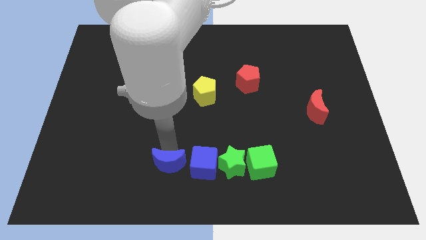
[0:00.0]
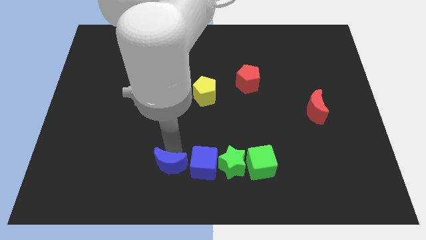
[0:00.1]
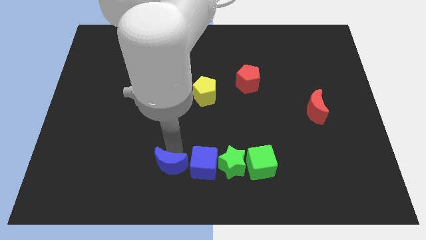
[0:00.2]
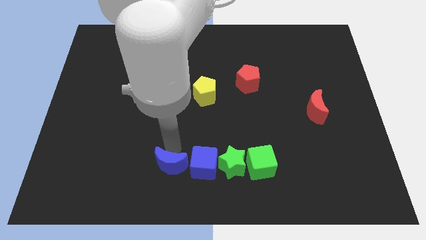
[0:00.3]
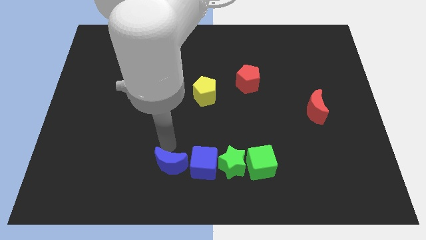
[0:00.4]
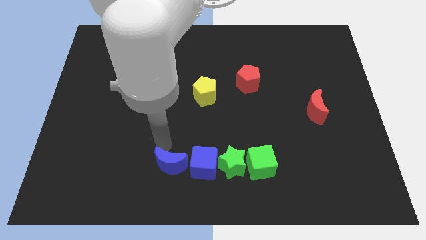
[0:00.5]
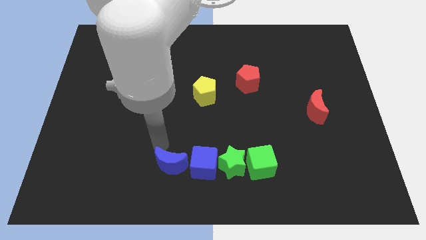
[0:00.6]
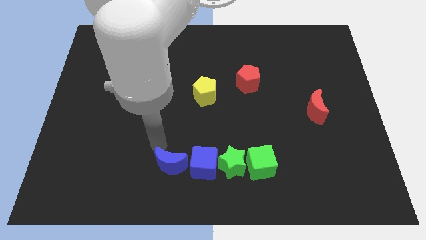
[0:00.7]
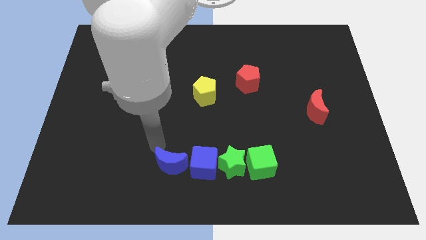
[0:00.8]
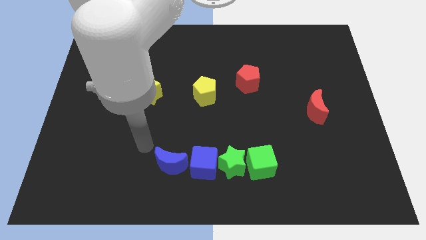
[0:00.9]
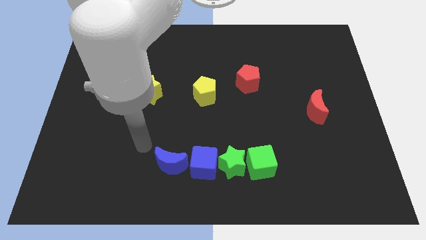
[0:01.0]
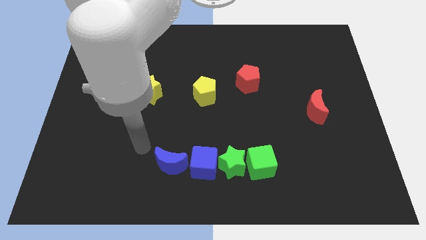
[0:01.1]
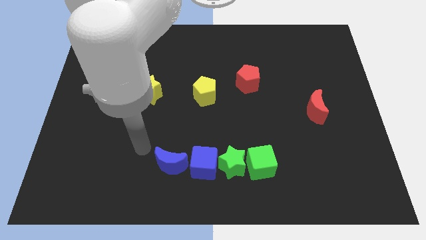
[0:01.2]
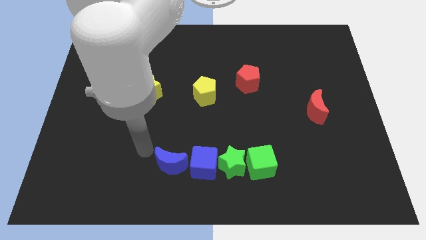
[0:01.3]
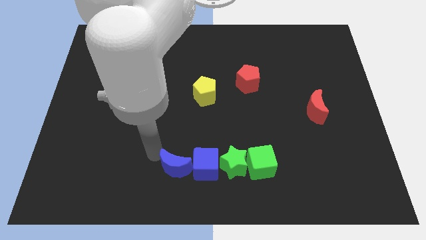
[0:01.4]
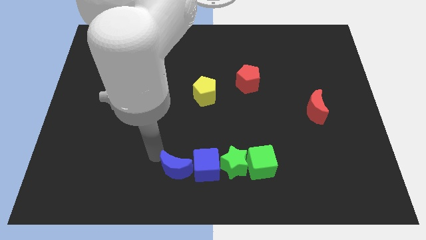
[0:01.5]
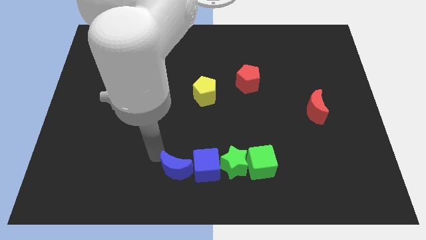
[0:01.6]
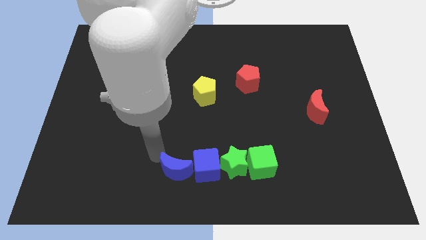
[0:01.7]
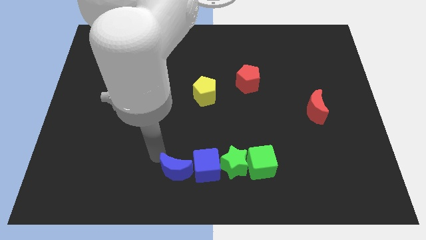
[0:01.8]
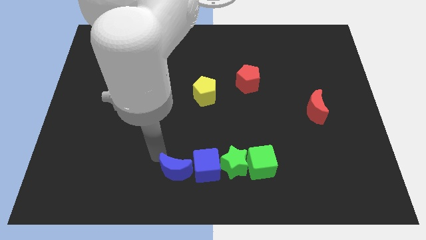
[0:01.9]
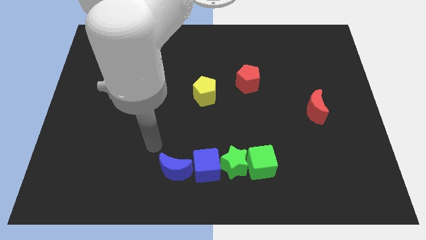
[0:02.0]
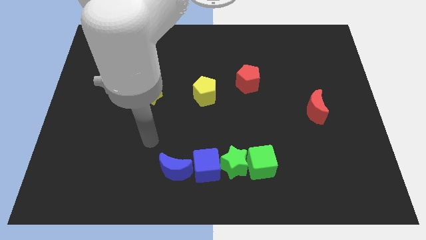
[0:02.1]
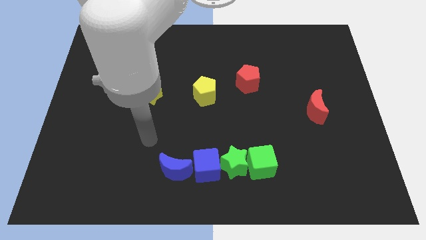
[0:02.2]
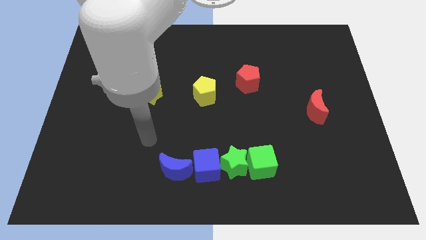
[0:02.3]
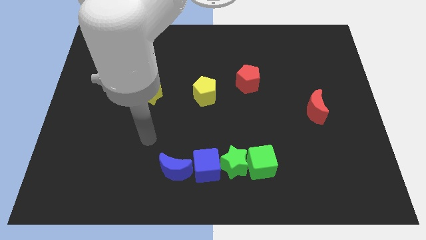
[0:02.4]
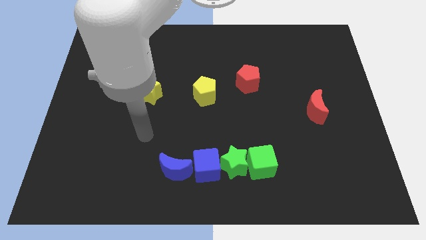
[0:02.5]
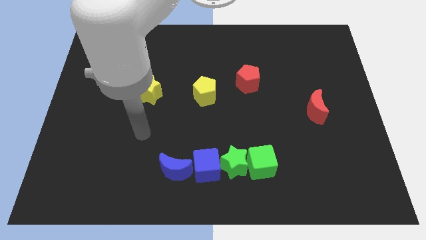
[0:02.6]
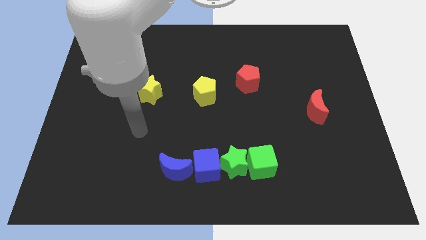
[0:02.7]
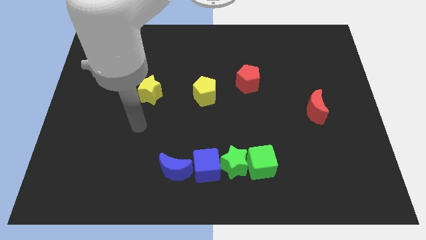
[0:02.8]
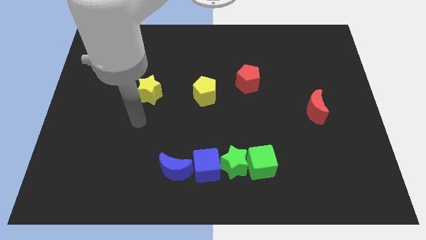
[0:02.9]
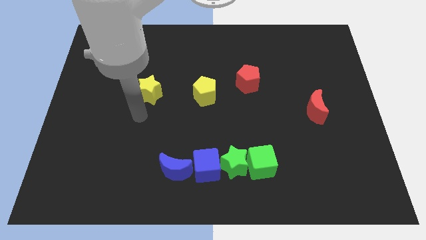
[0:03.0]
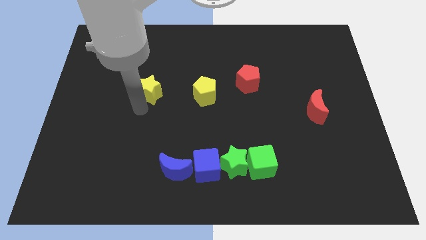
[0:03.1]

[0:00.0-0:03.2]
make the blue crescent to touch the left side of the blue cube

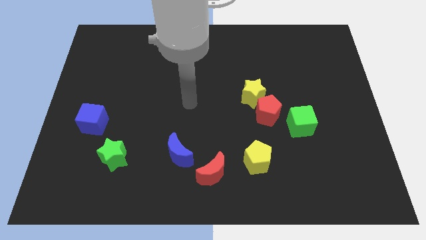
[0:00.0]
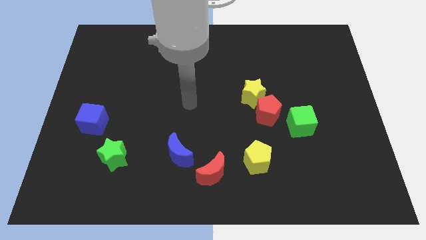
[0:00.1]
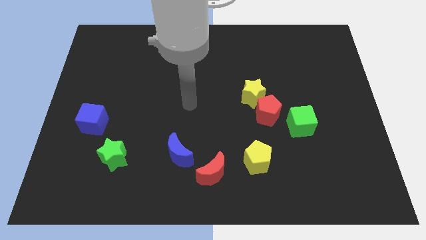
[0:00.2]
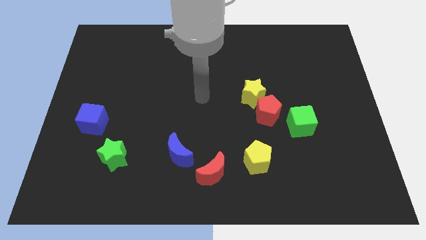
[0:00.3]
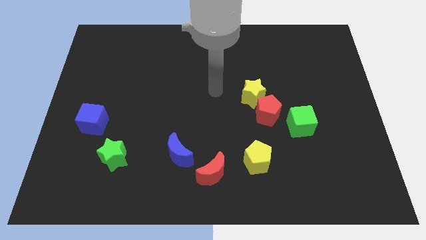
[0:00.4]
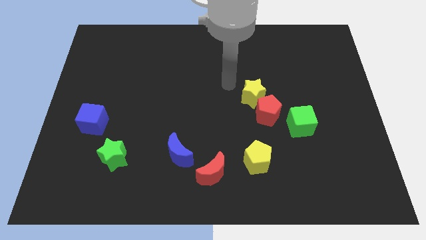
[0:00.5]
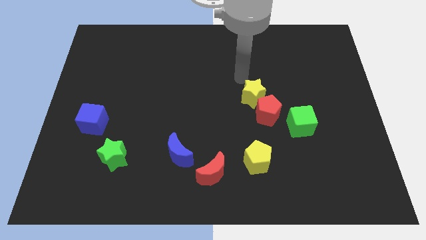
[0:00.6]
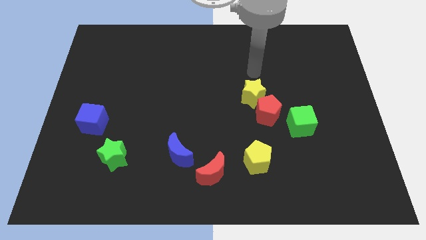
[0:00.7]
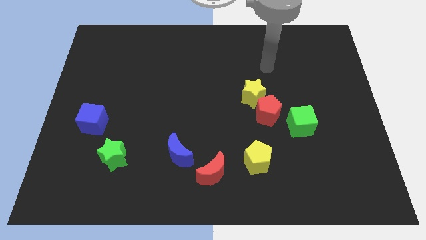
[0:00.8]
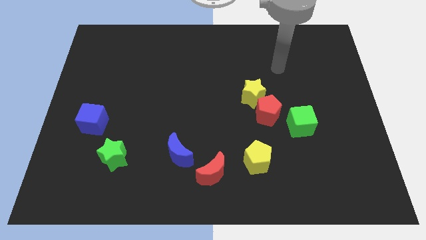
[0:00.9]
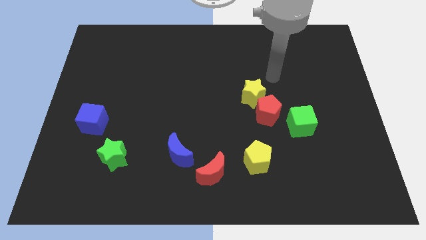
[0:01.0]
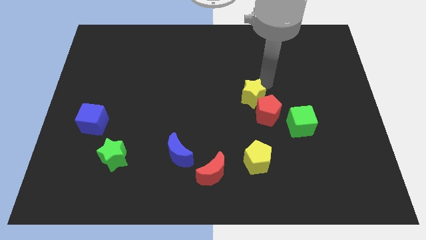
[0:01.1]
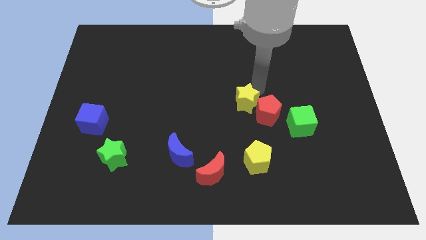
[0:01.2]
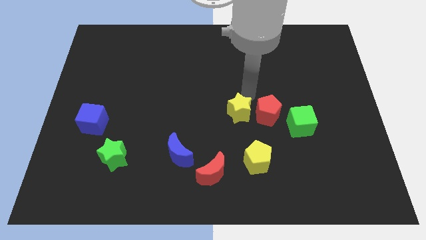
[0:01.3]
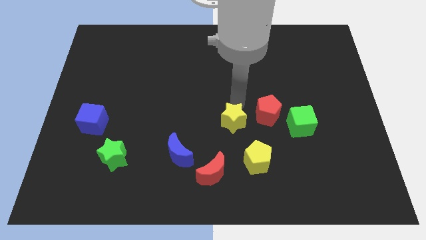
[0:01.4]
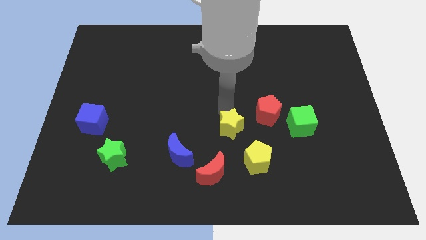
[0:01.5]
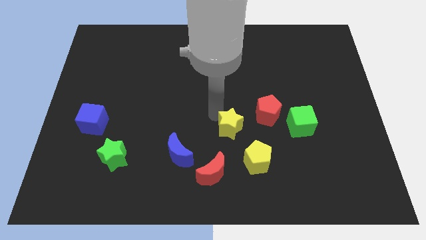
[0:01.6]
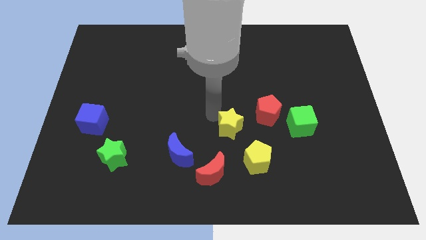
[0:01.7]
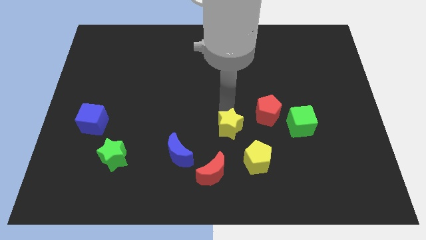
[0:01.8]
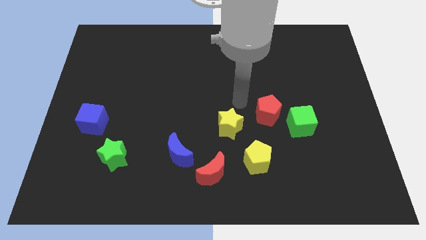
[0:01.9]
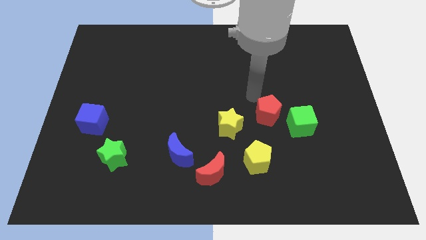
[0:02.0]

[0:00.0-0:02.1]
slide the yellow star diagonally to the yellow pentagon

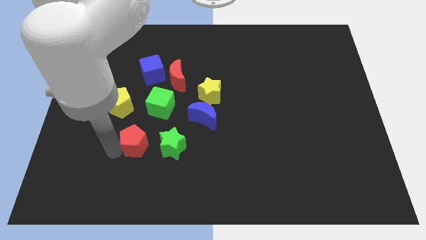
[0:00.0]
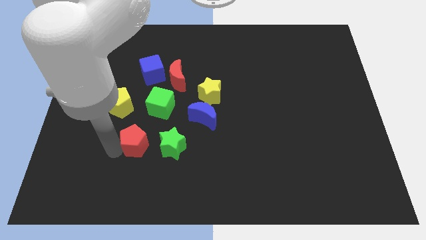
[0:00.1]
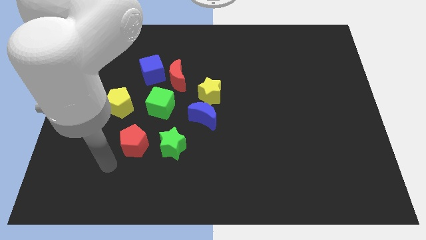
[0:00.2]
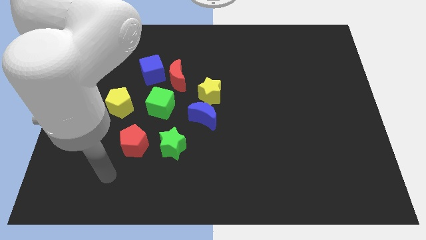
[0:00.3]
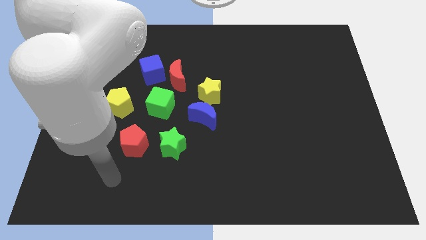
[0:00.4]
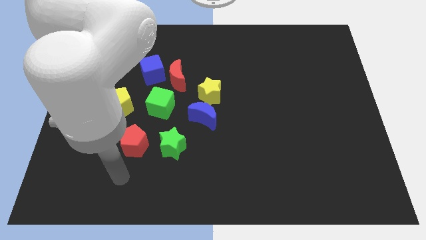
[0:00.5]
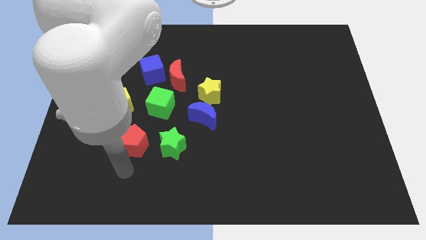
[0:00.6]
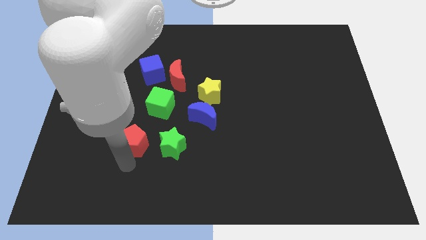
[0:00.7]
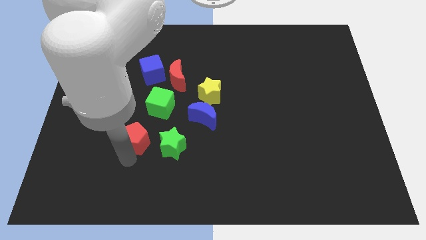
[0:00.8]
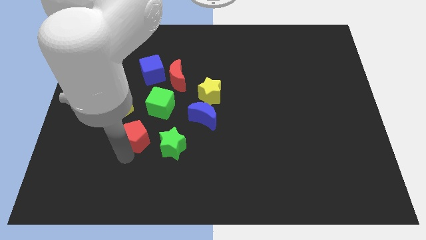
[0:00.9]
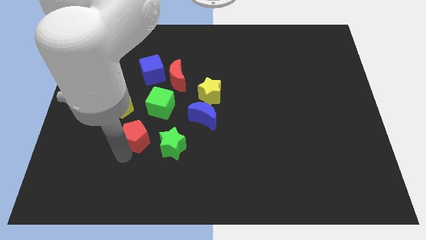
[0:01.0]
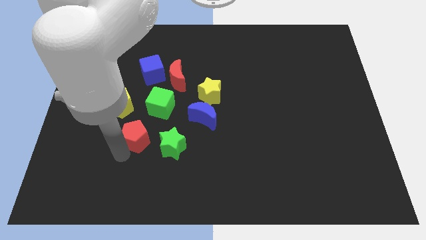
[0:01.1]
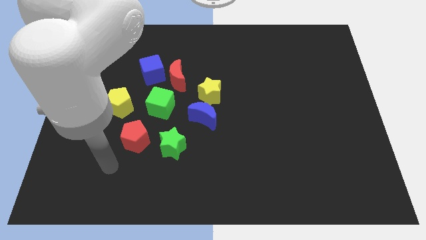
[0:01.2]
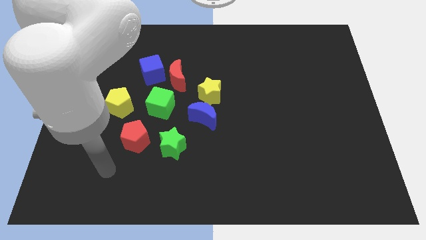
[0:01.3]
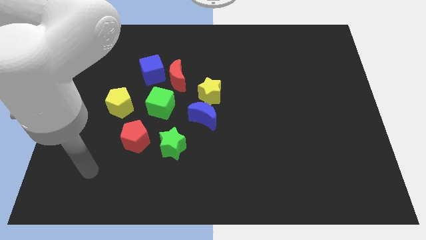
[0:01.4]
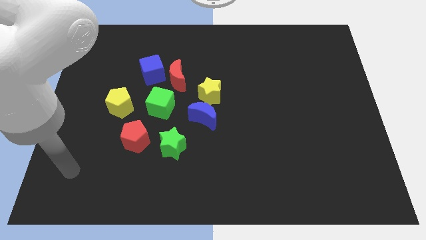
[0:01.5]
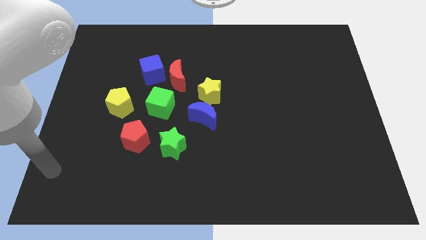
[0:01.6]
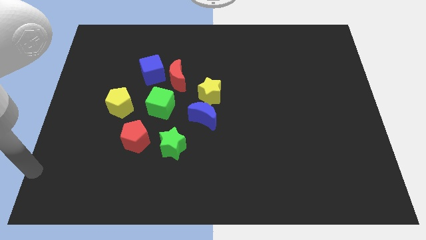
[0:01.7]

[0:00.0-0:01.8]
move yourself away from the red pentagon

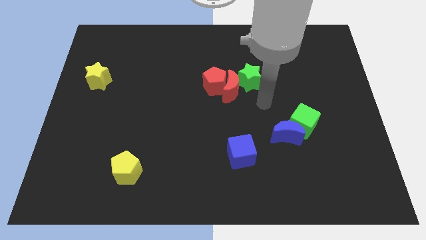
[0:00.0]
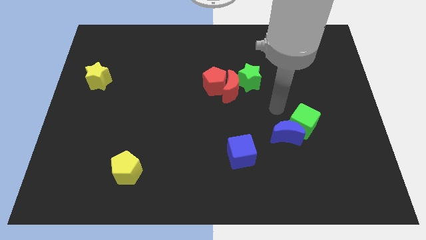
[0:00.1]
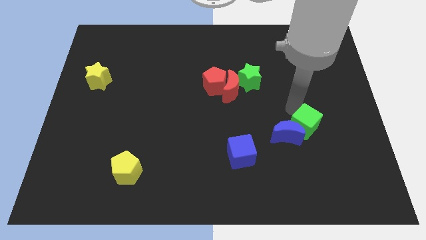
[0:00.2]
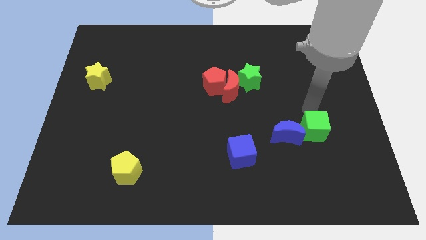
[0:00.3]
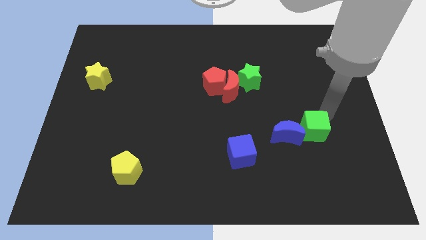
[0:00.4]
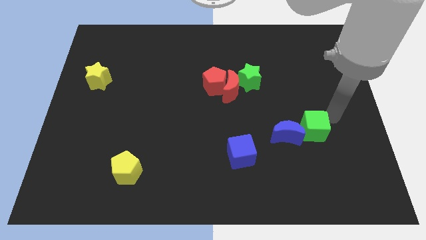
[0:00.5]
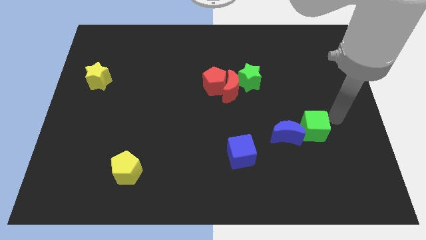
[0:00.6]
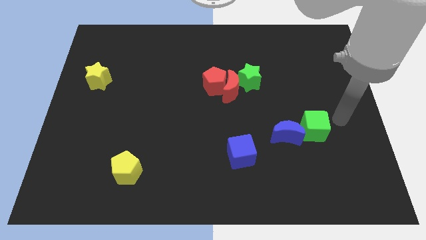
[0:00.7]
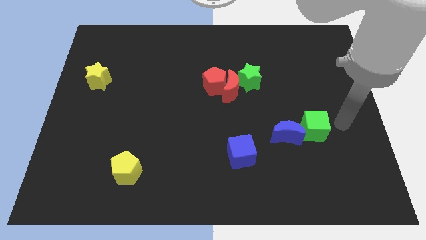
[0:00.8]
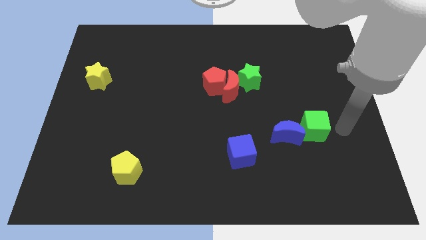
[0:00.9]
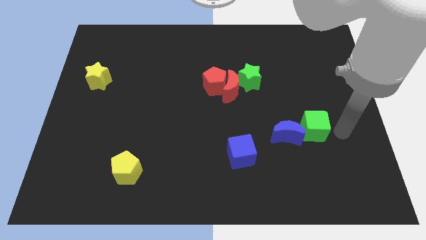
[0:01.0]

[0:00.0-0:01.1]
move the green cube to the right of the blue moon

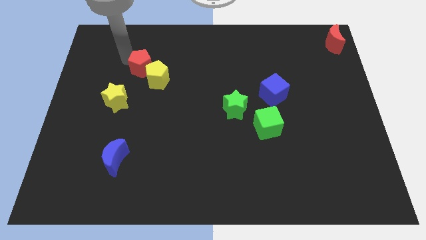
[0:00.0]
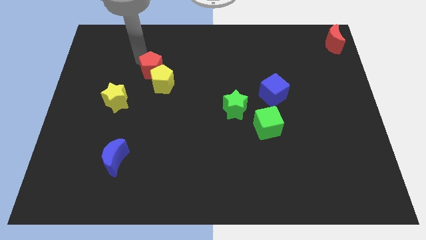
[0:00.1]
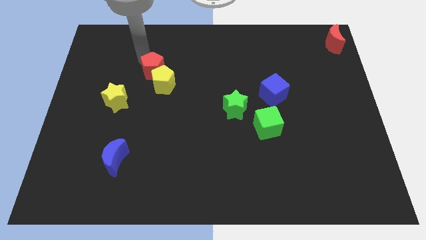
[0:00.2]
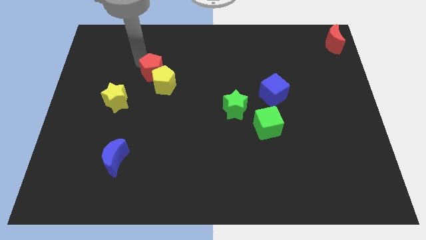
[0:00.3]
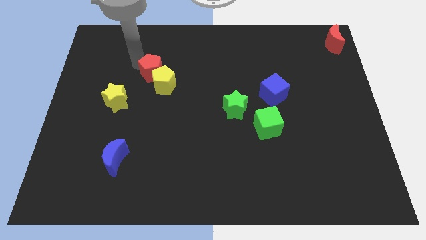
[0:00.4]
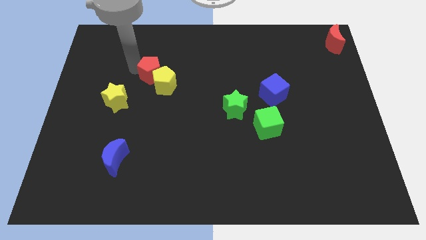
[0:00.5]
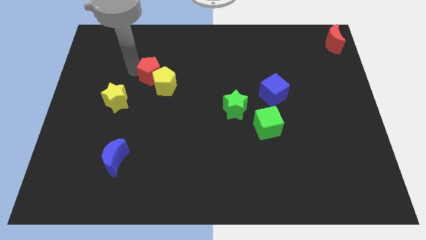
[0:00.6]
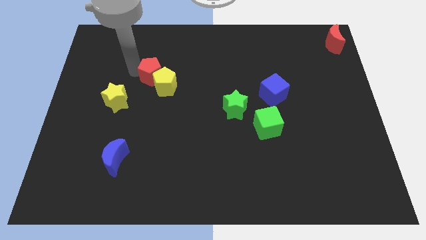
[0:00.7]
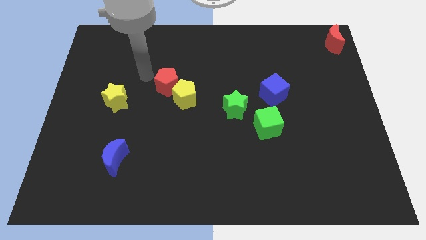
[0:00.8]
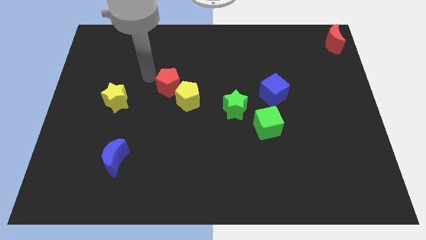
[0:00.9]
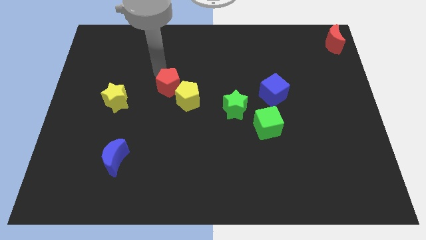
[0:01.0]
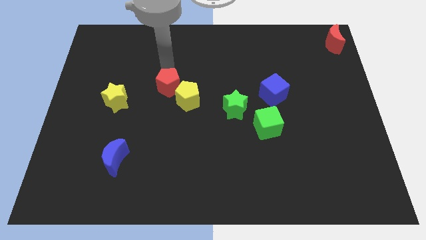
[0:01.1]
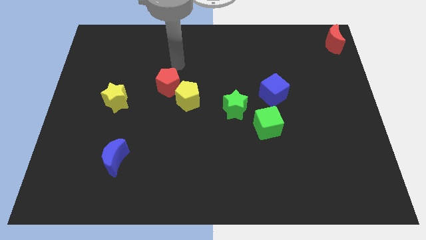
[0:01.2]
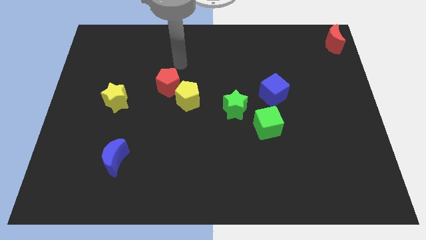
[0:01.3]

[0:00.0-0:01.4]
slide red and the yellow pentagon towards the center
